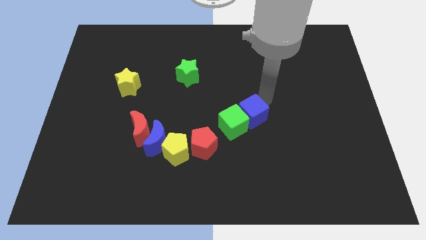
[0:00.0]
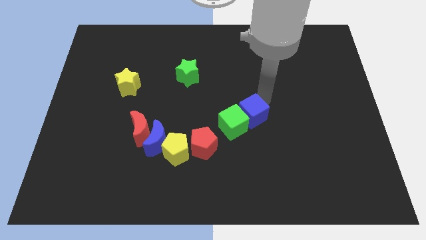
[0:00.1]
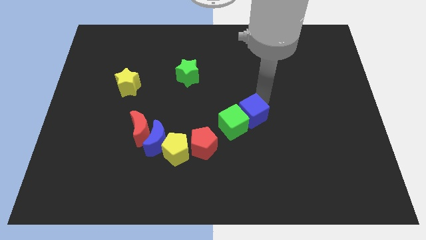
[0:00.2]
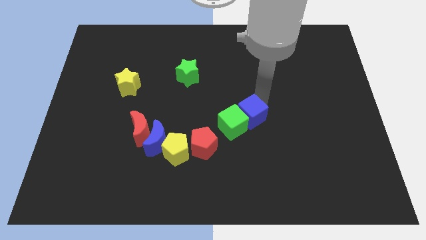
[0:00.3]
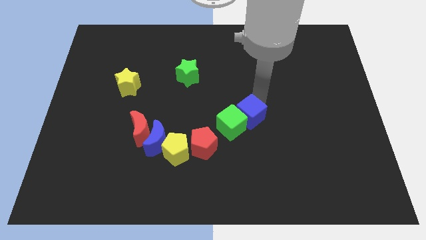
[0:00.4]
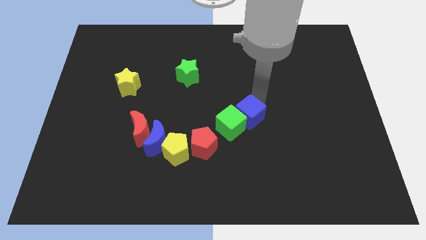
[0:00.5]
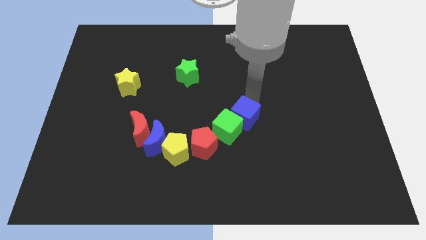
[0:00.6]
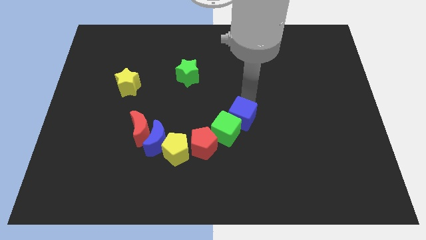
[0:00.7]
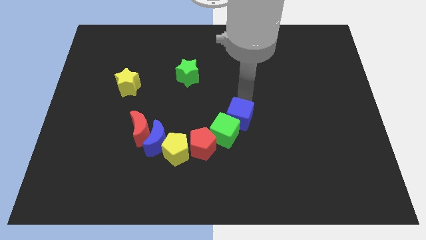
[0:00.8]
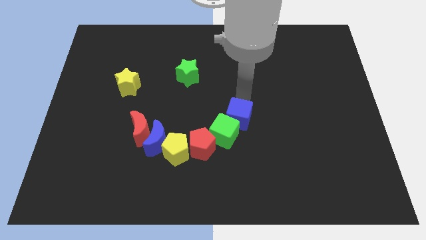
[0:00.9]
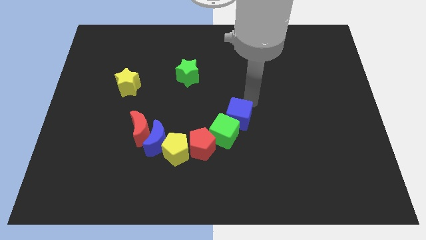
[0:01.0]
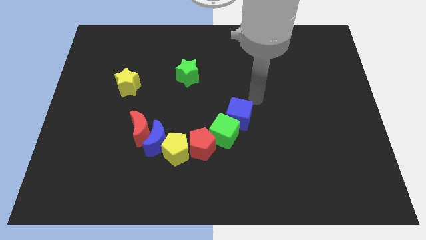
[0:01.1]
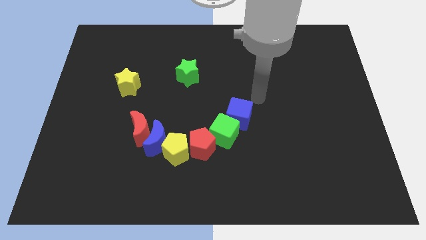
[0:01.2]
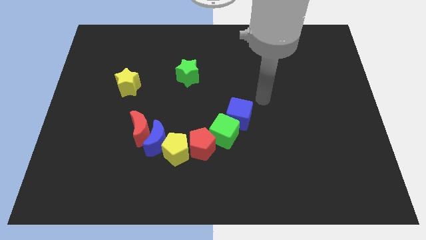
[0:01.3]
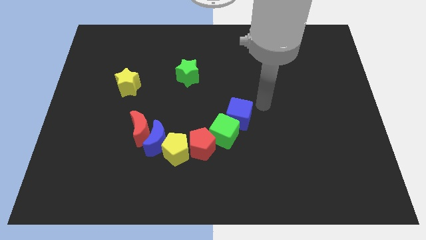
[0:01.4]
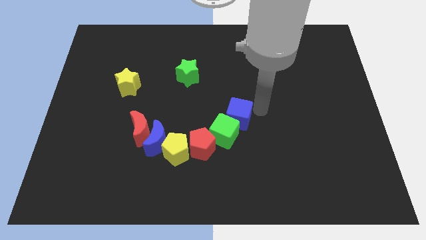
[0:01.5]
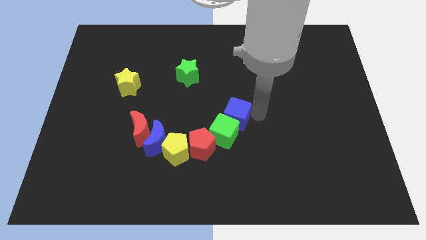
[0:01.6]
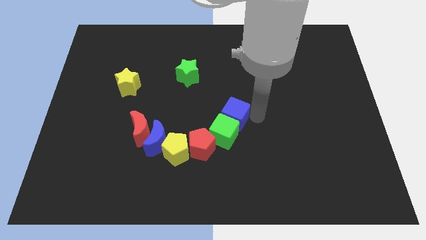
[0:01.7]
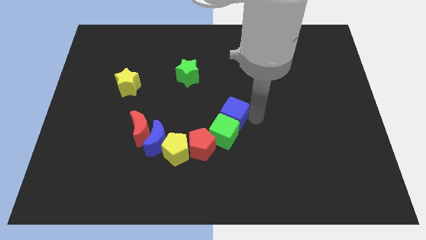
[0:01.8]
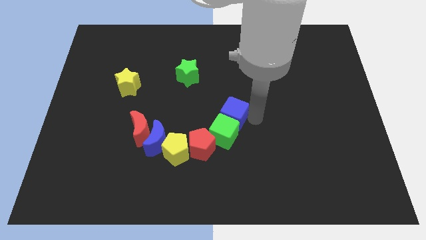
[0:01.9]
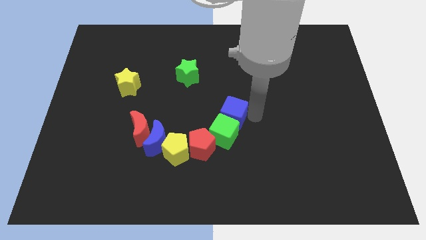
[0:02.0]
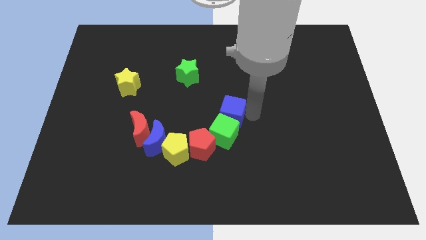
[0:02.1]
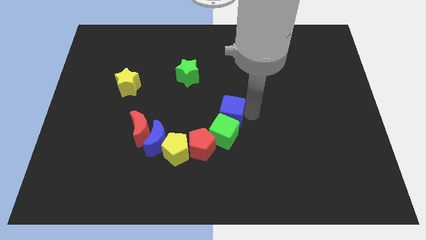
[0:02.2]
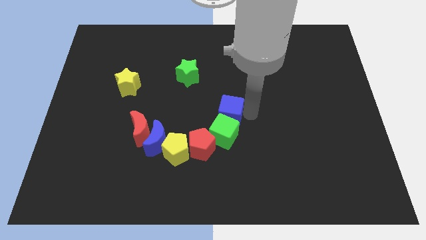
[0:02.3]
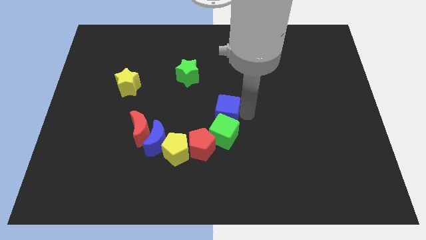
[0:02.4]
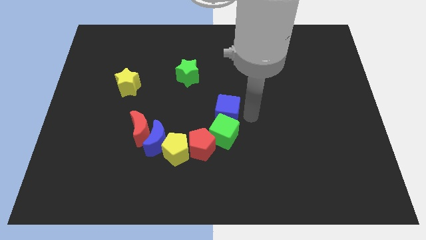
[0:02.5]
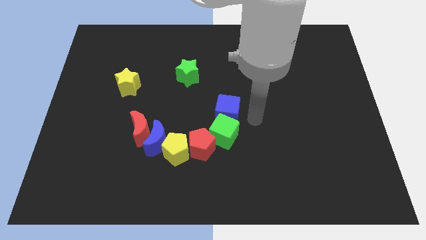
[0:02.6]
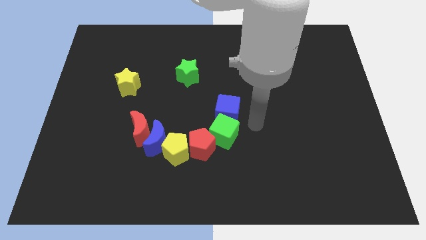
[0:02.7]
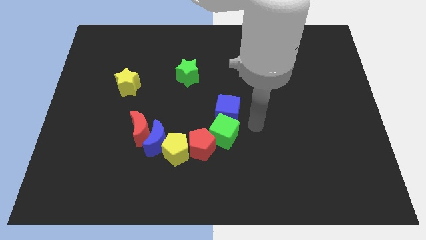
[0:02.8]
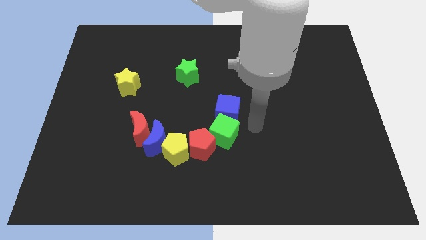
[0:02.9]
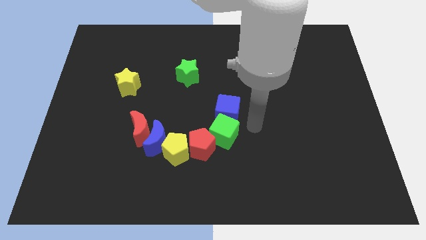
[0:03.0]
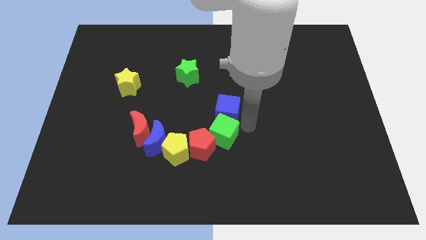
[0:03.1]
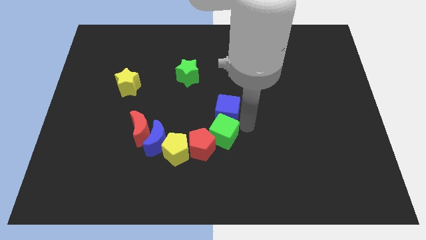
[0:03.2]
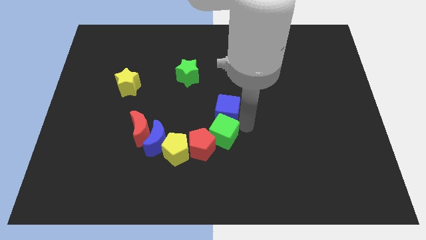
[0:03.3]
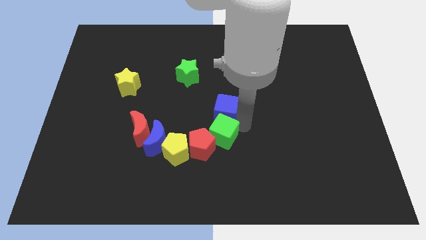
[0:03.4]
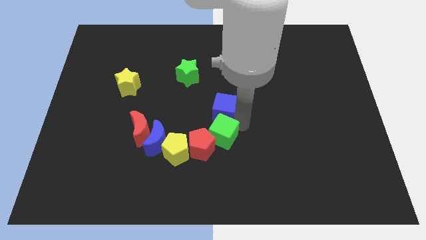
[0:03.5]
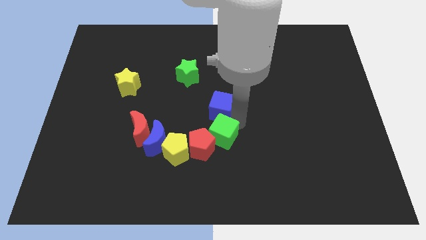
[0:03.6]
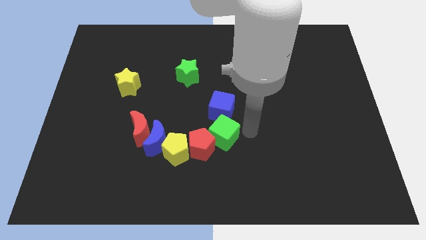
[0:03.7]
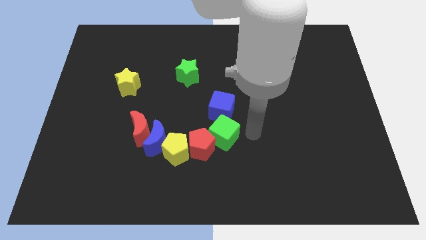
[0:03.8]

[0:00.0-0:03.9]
place the blue cube above the green cube

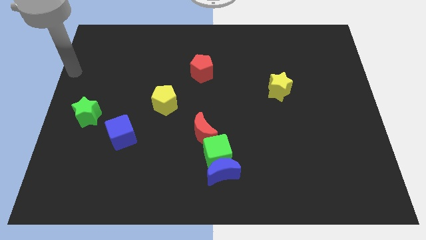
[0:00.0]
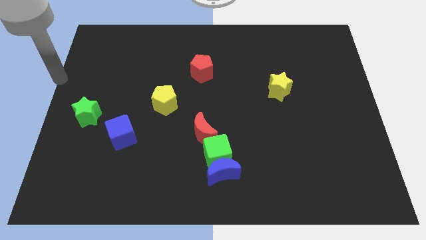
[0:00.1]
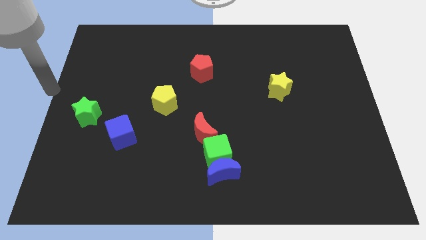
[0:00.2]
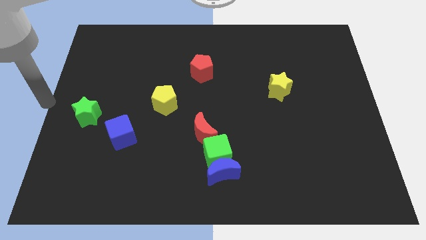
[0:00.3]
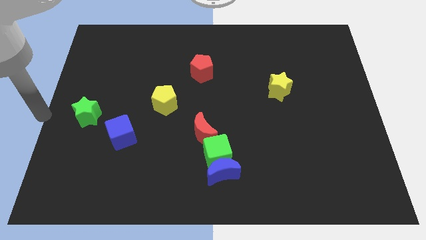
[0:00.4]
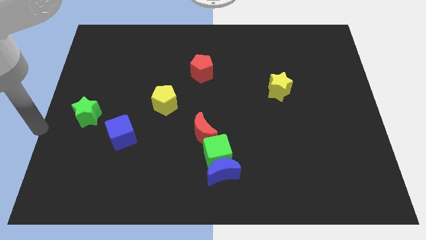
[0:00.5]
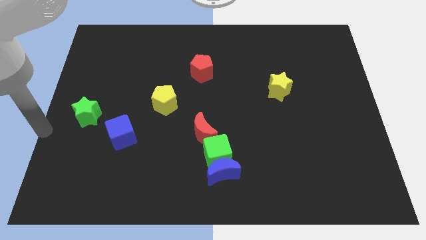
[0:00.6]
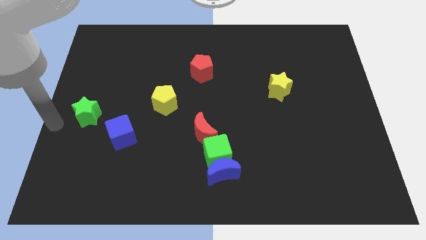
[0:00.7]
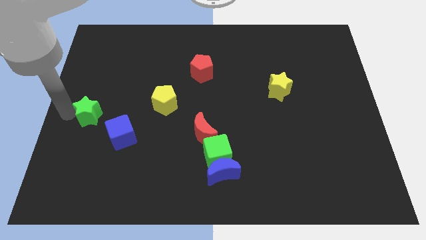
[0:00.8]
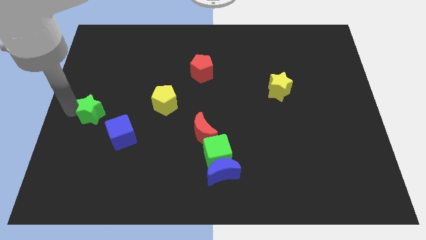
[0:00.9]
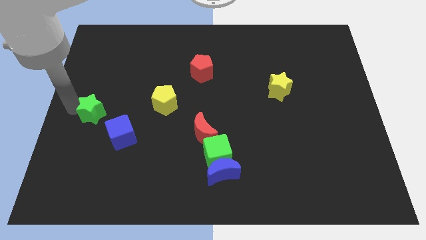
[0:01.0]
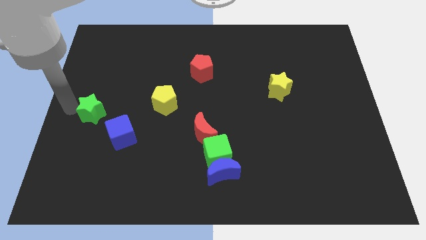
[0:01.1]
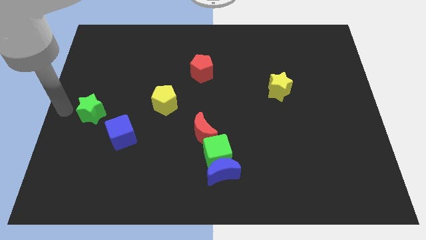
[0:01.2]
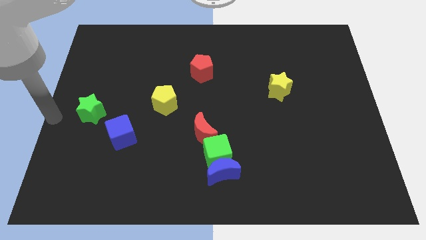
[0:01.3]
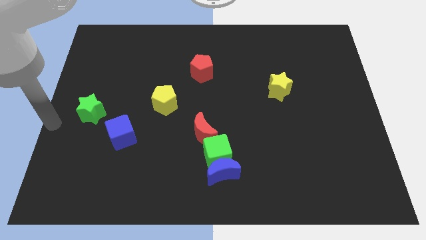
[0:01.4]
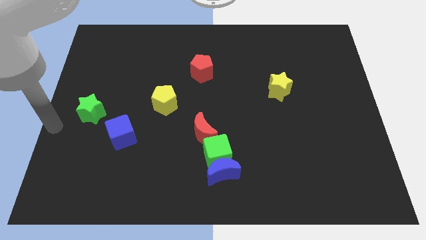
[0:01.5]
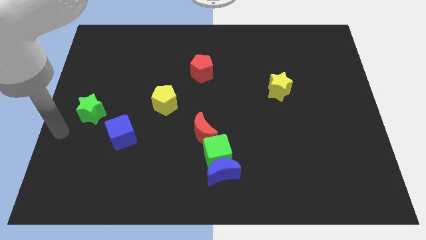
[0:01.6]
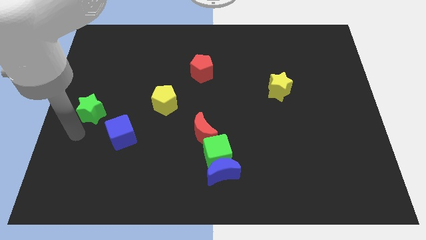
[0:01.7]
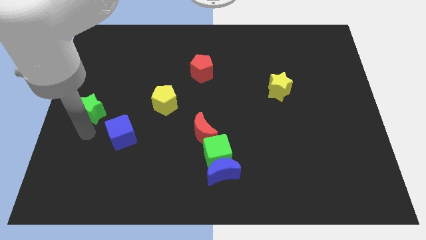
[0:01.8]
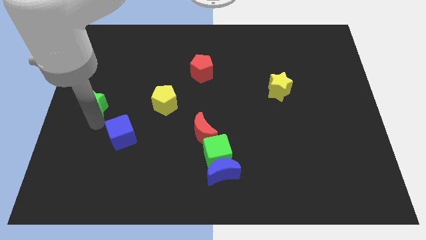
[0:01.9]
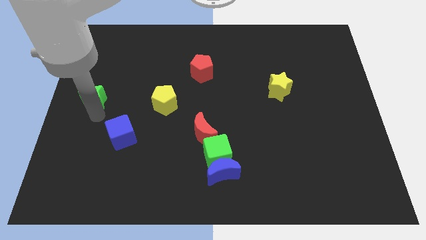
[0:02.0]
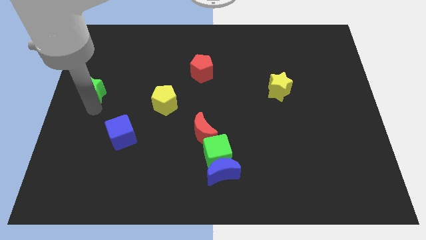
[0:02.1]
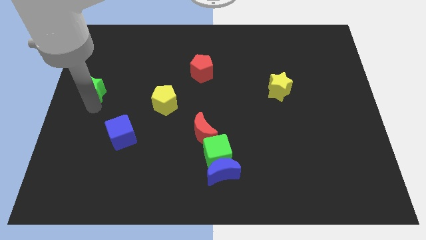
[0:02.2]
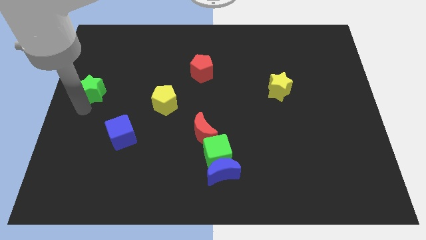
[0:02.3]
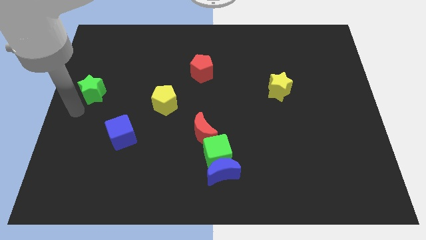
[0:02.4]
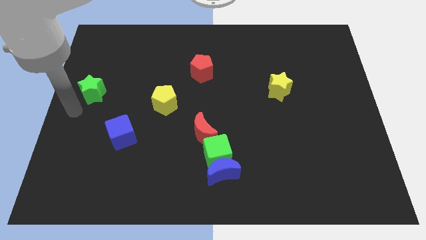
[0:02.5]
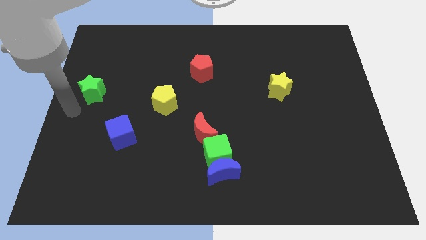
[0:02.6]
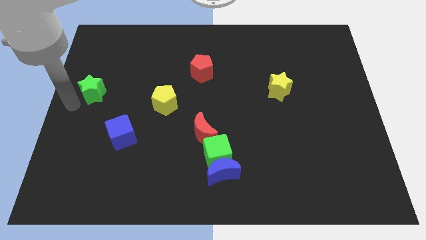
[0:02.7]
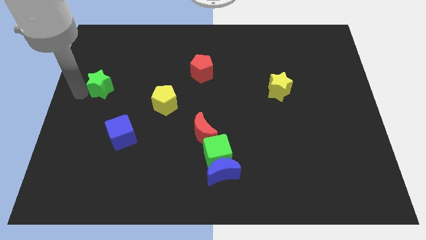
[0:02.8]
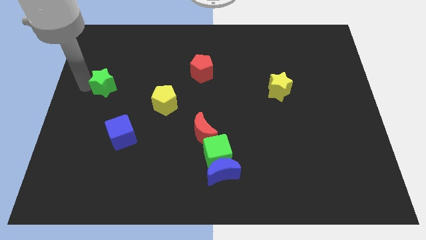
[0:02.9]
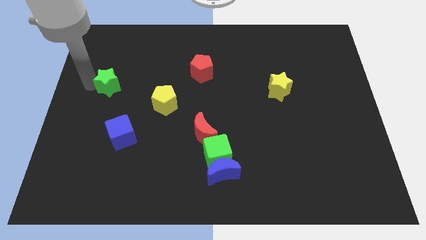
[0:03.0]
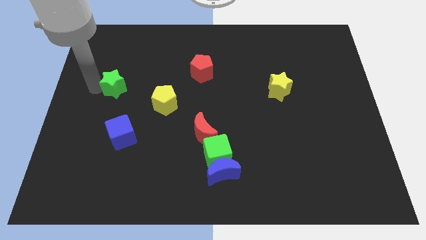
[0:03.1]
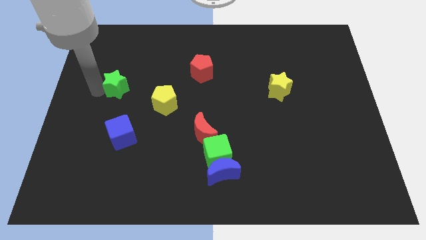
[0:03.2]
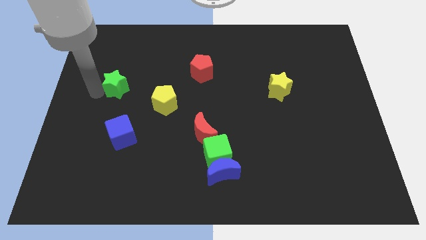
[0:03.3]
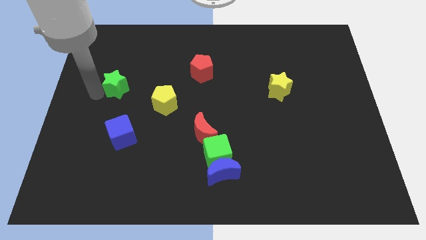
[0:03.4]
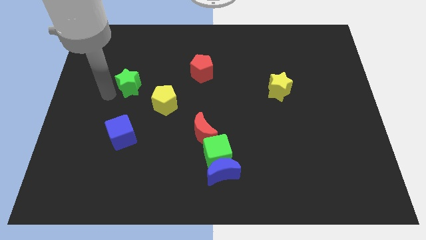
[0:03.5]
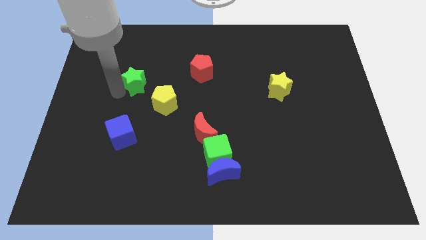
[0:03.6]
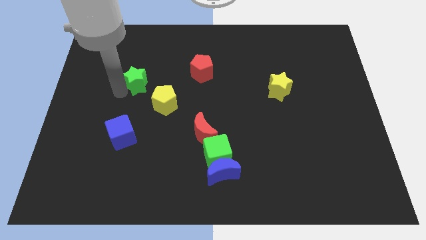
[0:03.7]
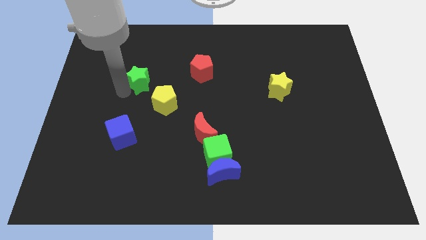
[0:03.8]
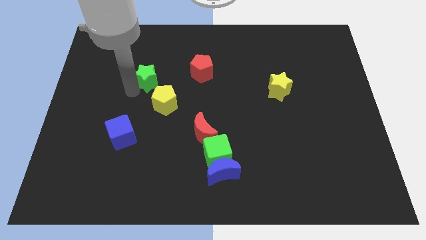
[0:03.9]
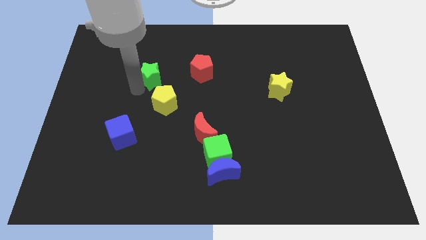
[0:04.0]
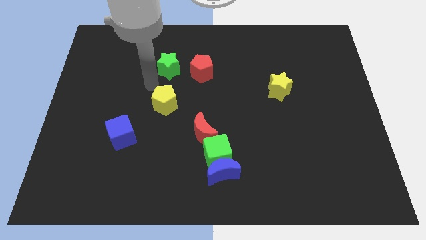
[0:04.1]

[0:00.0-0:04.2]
place the green star above the yellow pentagon

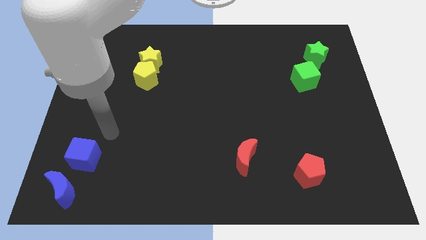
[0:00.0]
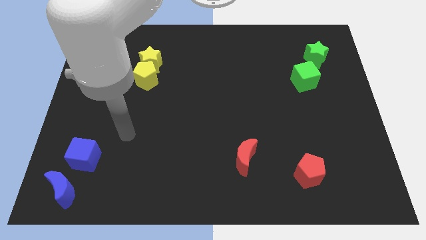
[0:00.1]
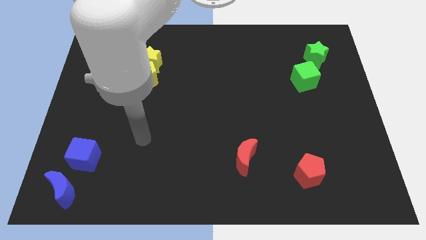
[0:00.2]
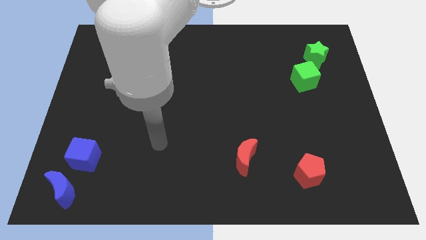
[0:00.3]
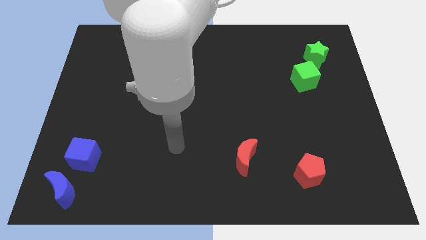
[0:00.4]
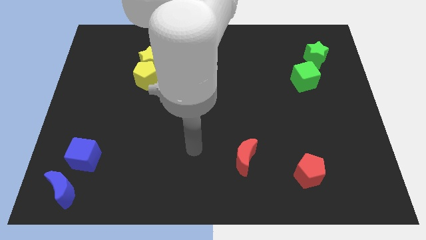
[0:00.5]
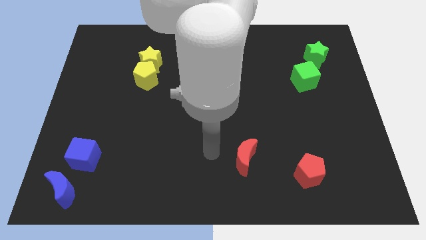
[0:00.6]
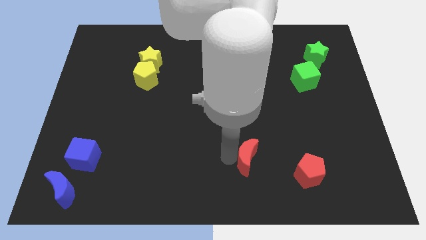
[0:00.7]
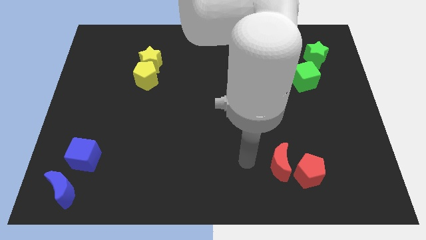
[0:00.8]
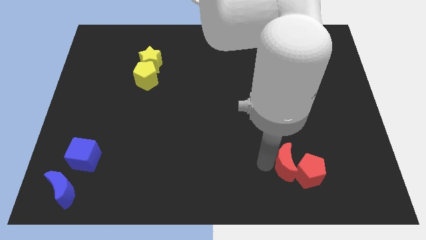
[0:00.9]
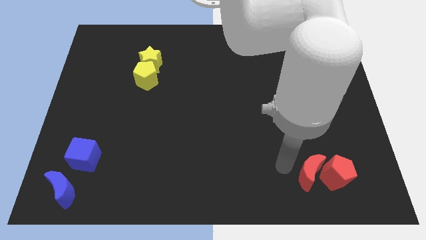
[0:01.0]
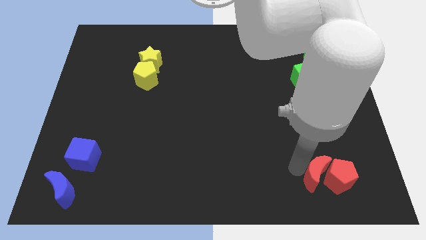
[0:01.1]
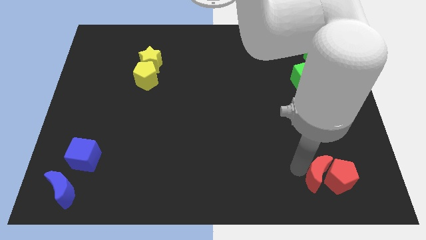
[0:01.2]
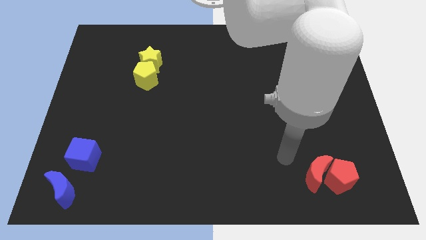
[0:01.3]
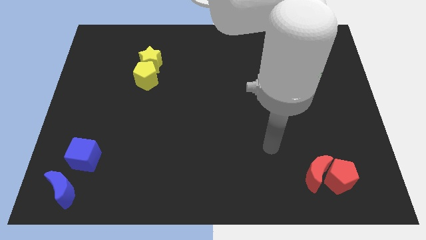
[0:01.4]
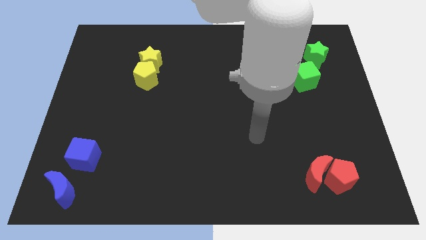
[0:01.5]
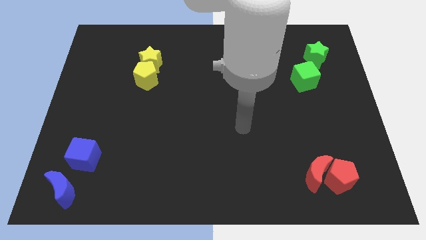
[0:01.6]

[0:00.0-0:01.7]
push red moon into red pentagon
